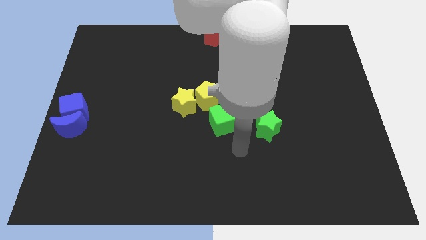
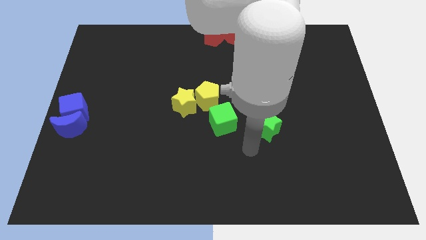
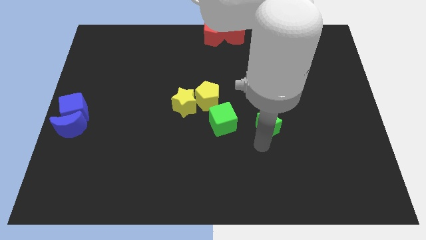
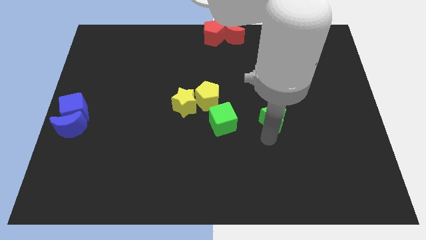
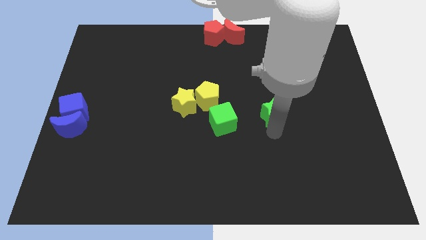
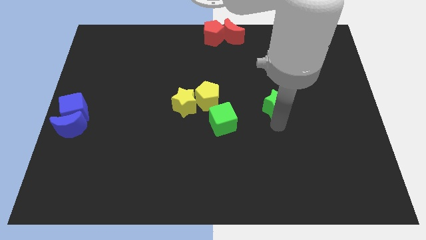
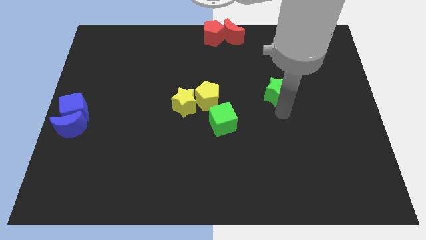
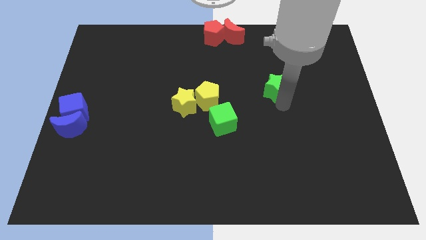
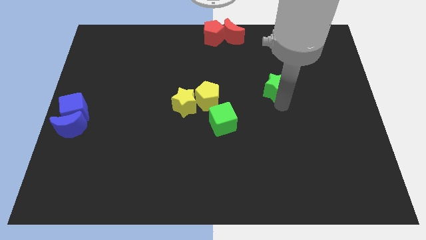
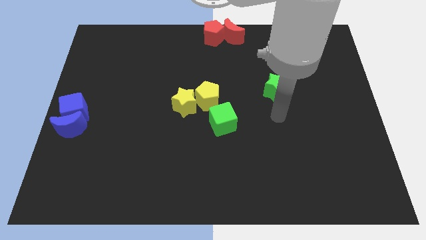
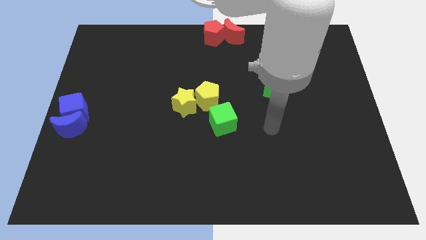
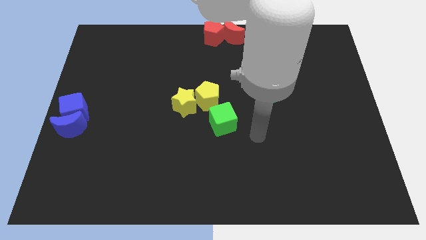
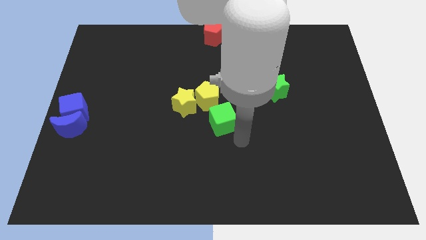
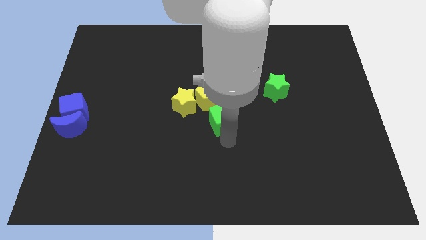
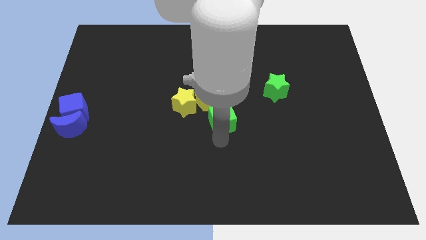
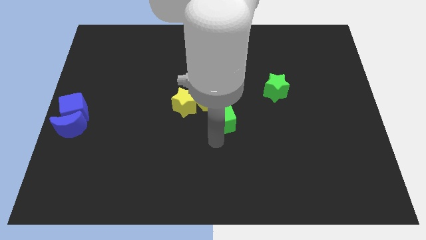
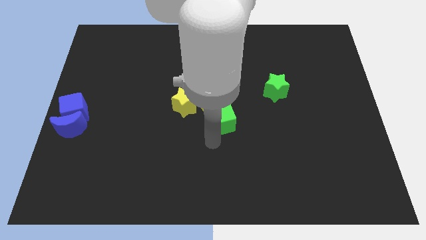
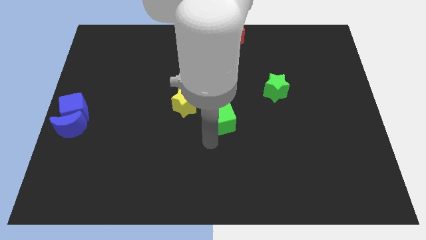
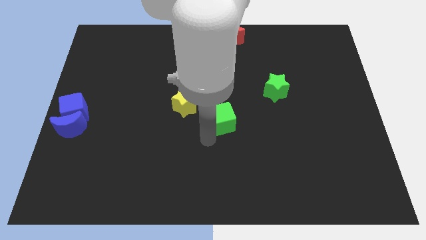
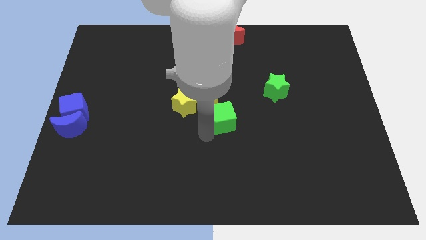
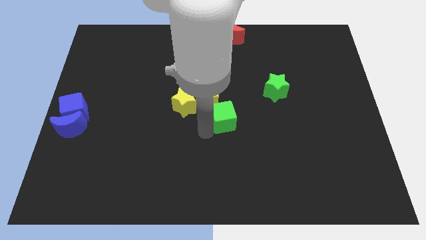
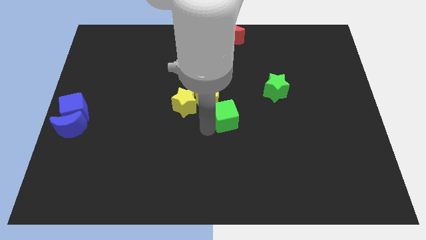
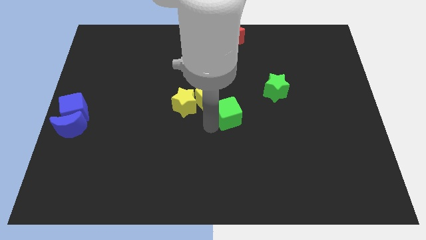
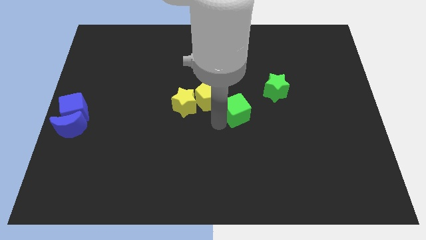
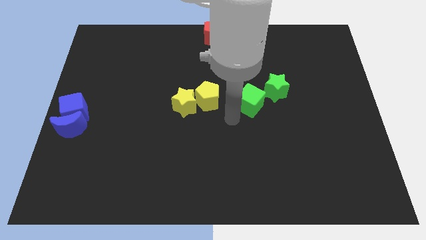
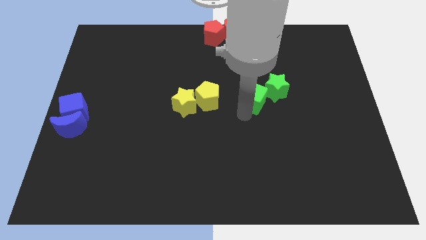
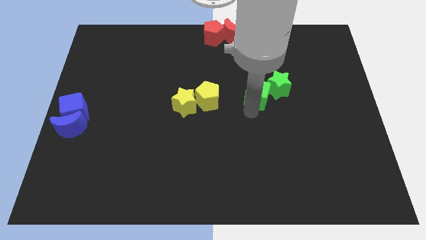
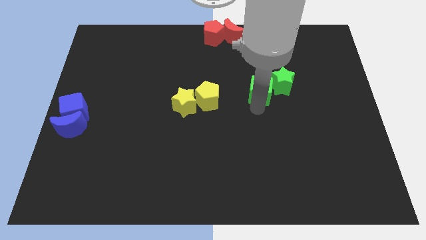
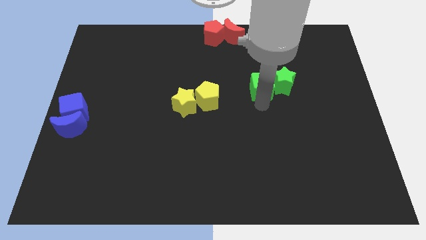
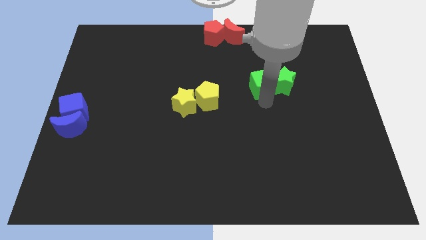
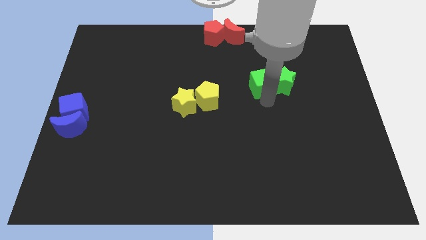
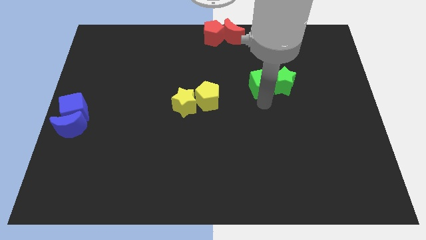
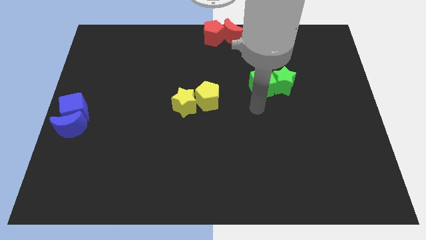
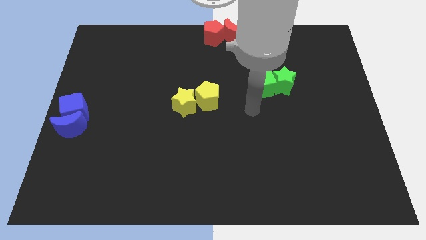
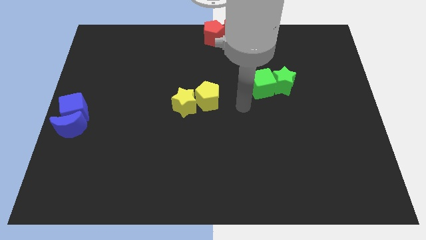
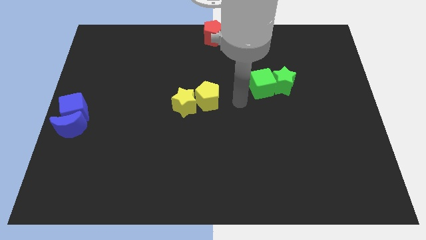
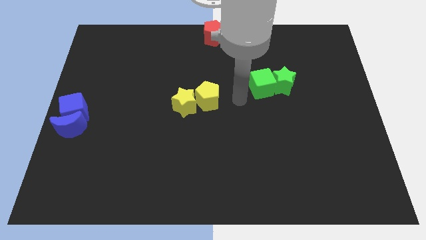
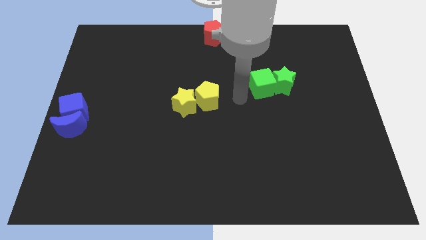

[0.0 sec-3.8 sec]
place your arm in between the green cube and yellow pentagon

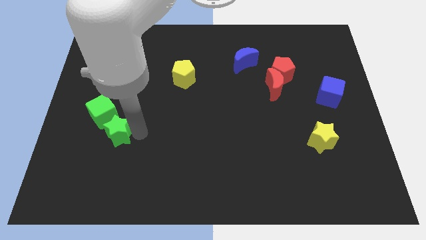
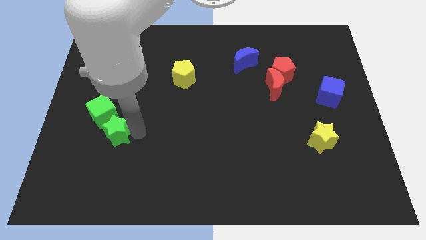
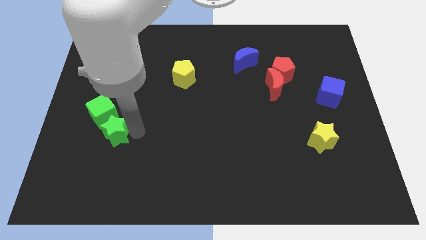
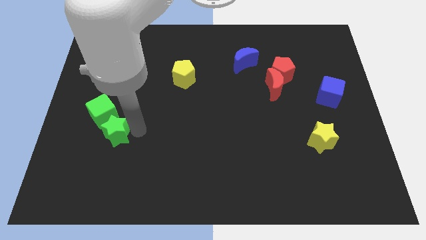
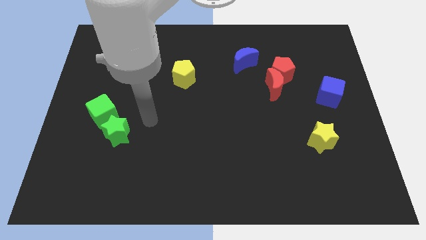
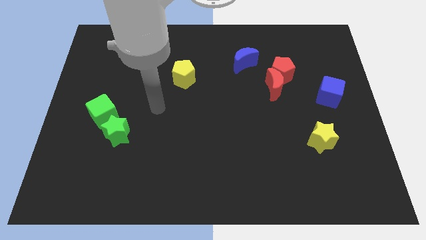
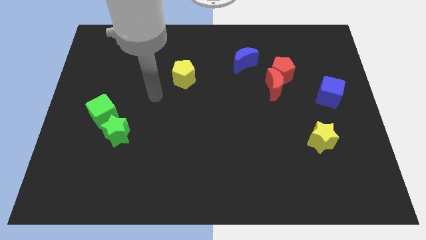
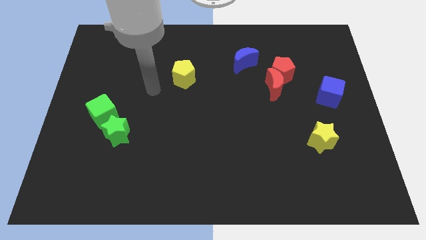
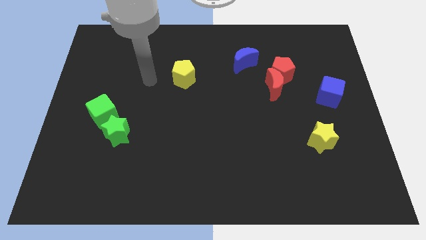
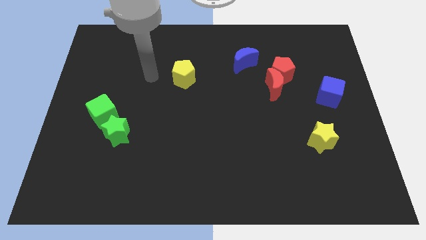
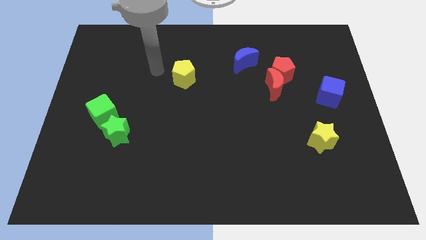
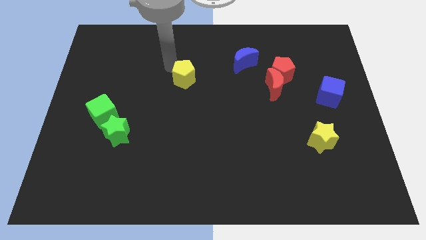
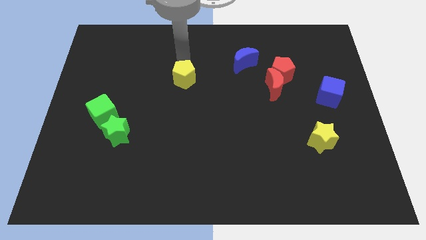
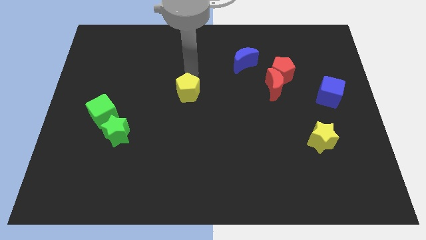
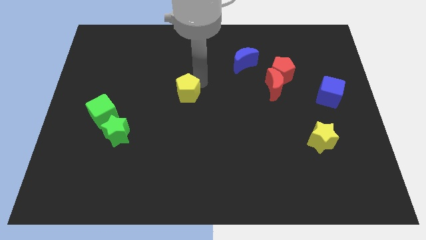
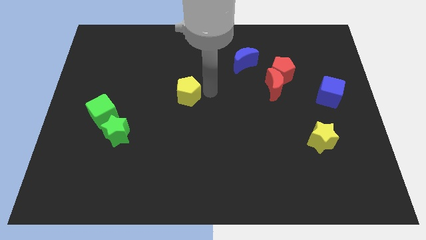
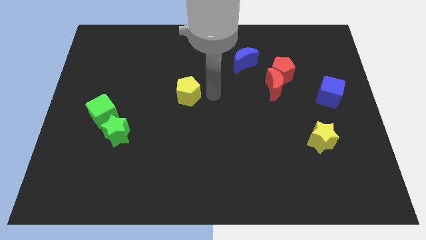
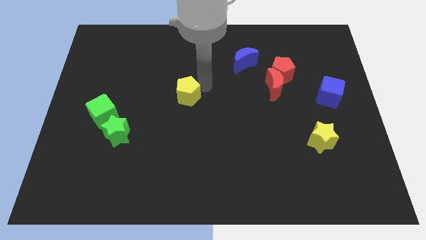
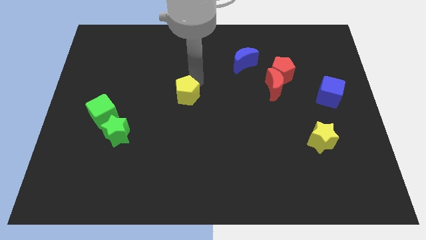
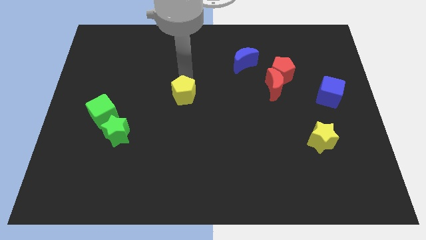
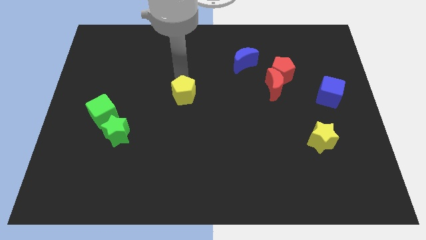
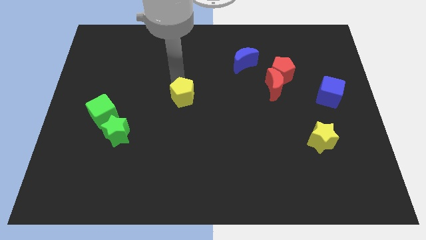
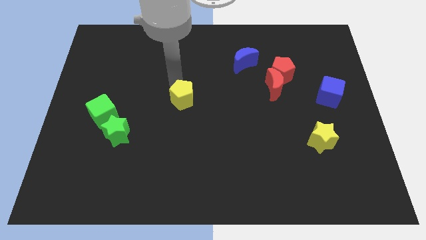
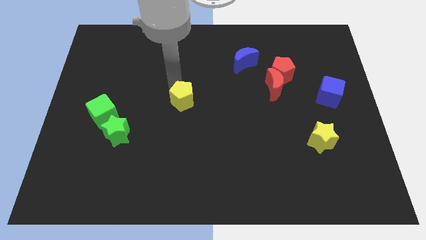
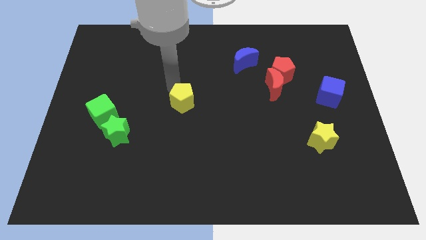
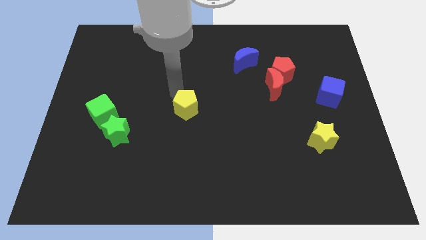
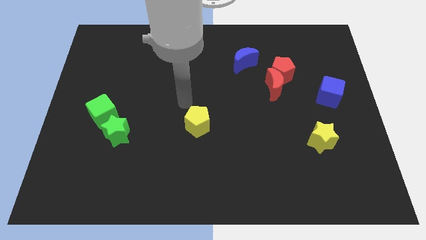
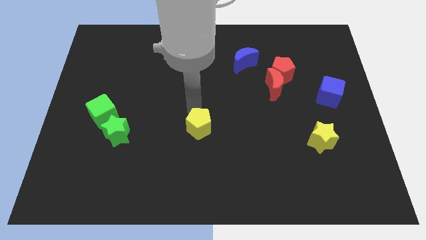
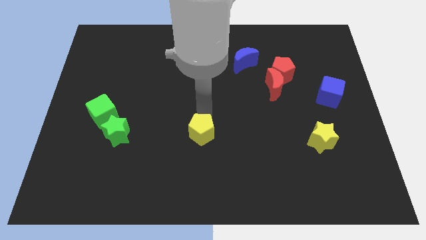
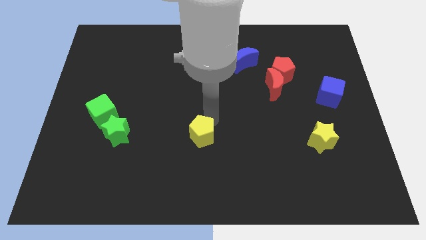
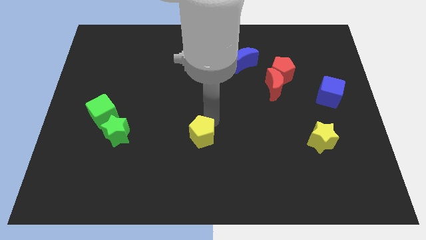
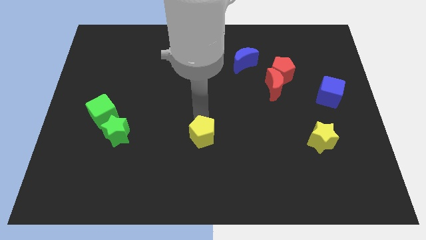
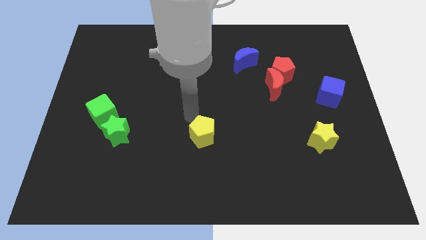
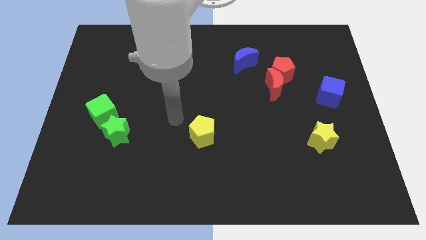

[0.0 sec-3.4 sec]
push the yellow pentagon to the center of the board

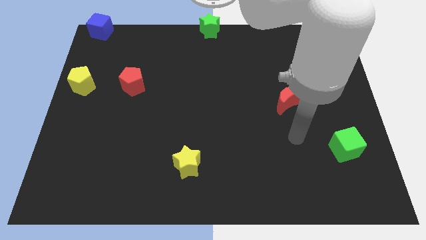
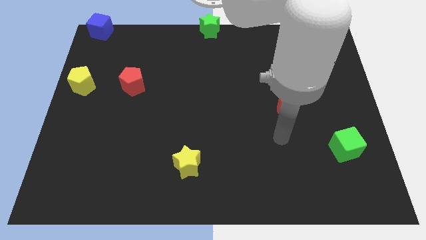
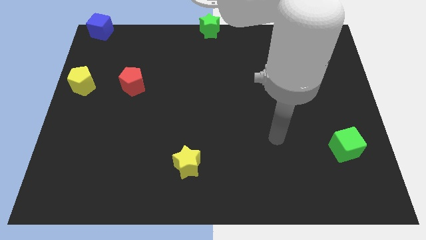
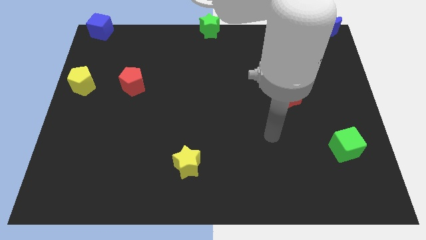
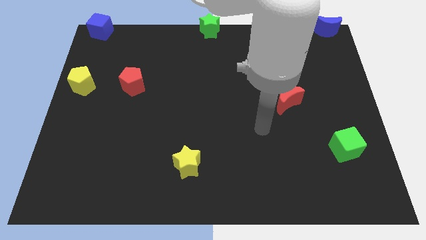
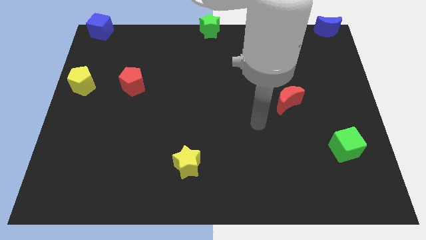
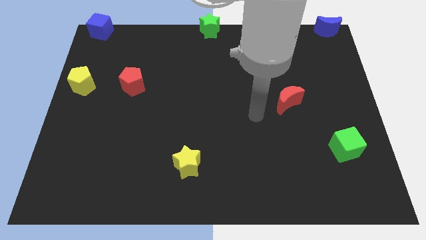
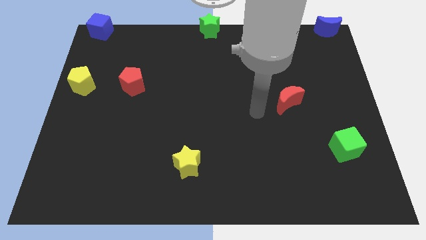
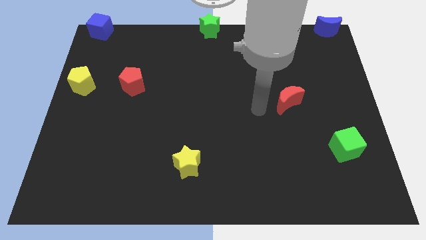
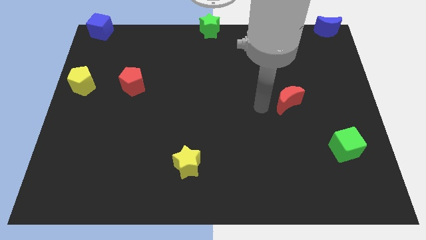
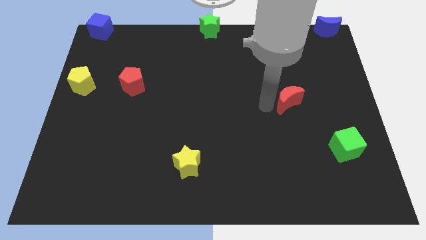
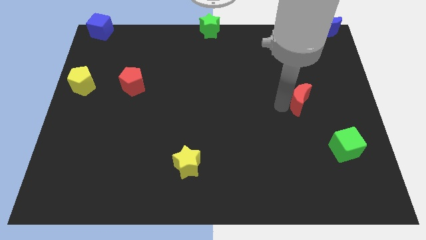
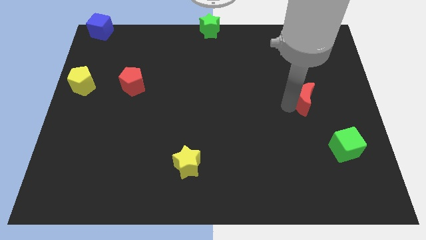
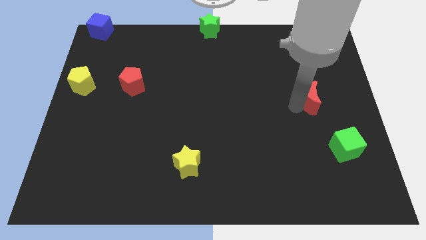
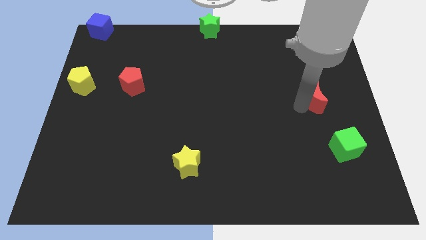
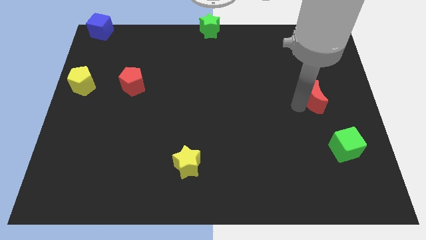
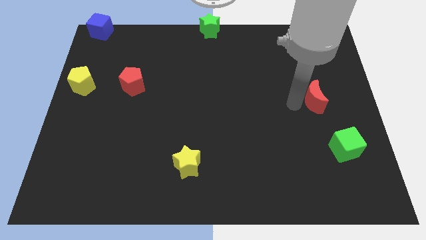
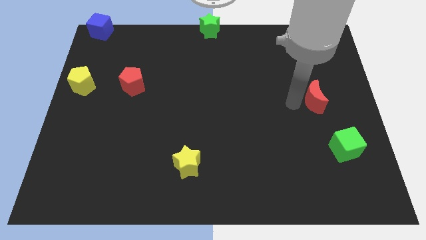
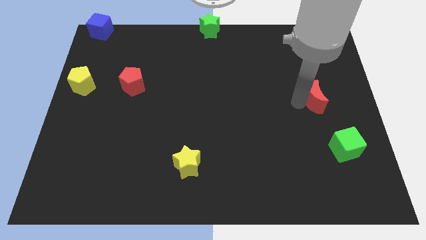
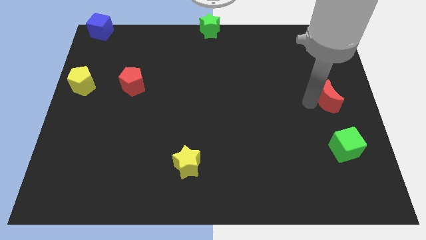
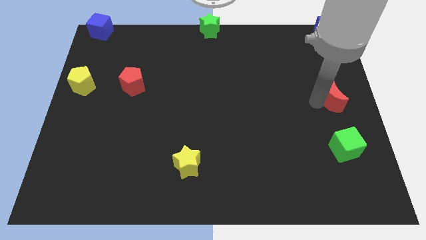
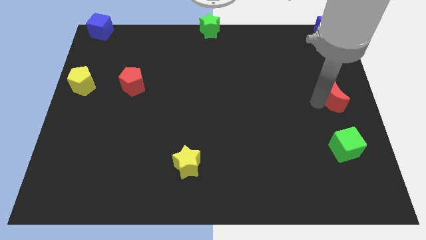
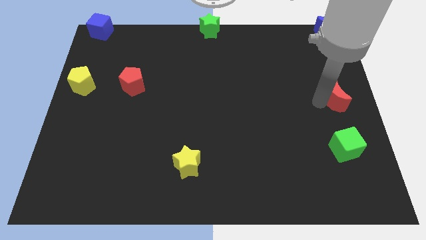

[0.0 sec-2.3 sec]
place red crescent above green cube
